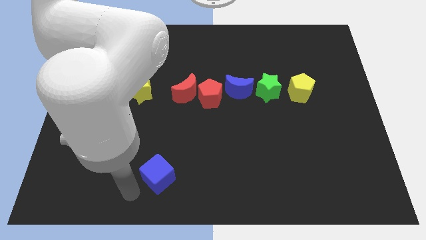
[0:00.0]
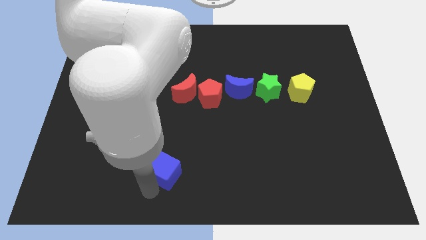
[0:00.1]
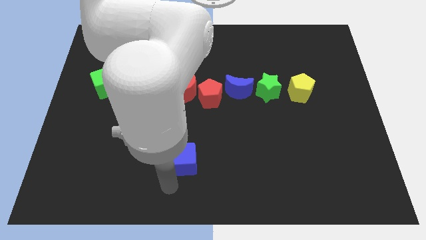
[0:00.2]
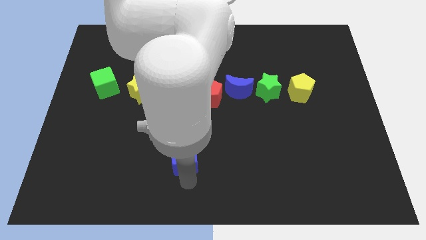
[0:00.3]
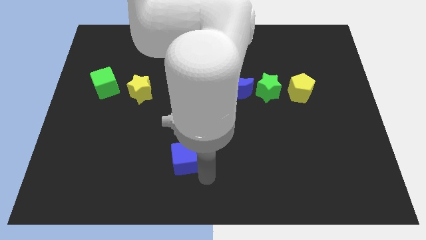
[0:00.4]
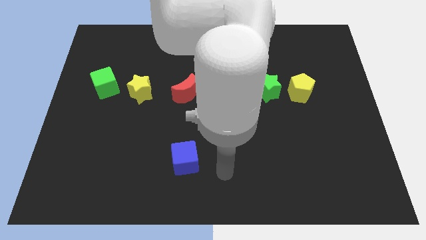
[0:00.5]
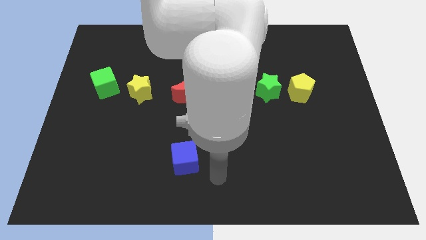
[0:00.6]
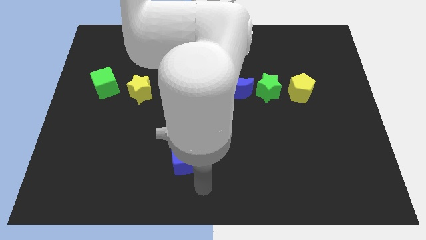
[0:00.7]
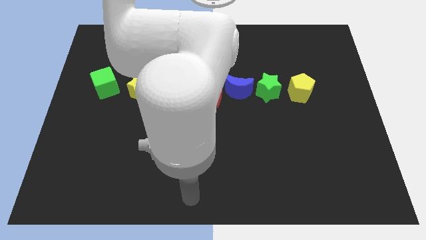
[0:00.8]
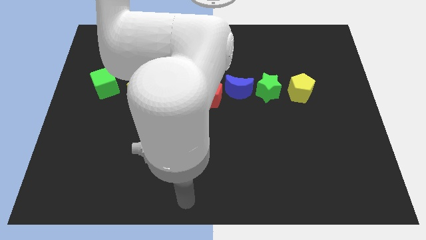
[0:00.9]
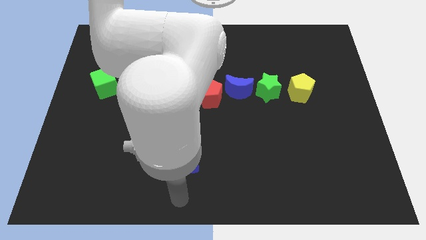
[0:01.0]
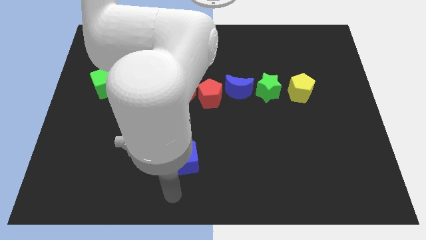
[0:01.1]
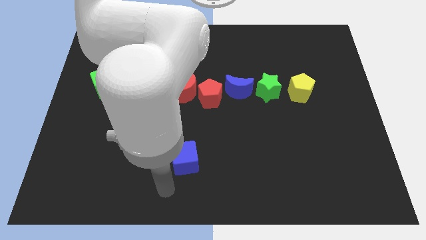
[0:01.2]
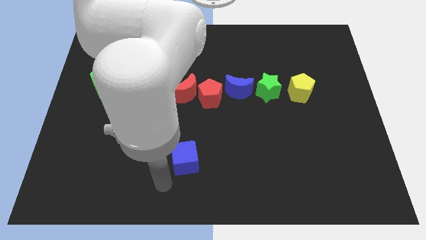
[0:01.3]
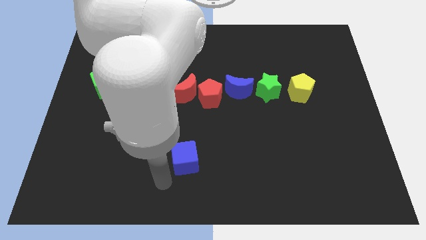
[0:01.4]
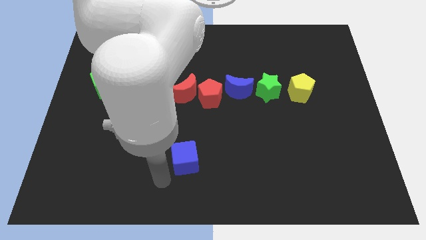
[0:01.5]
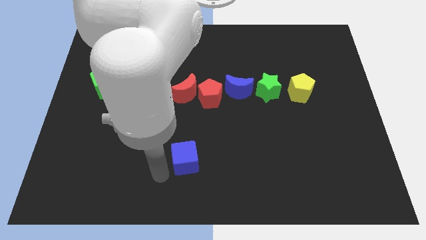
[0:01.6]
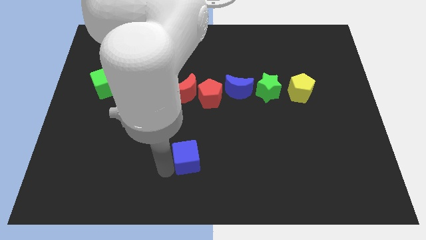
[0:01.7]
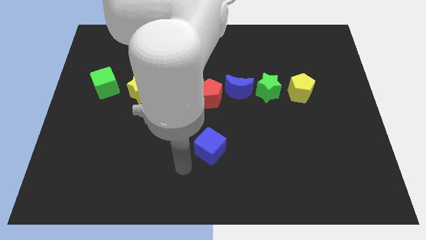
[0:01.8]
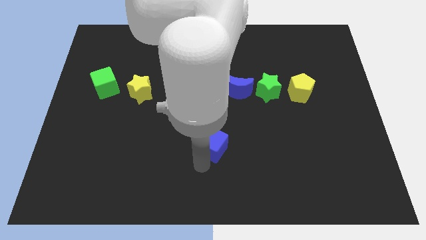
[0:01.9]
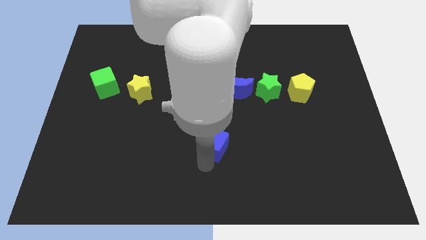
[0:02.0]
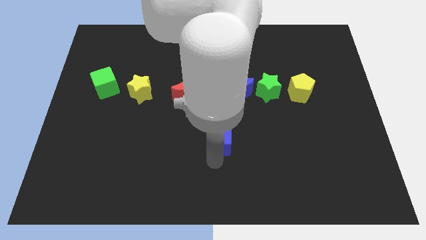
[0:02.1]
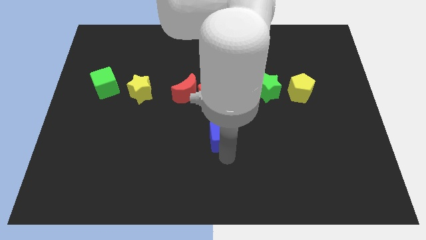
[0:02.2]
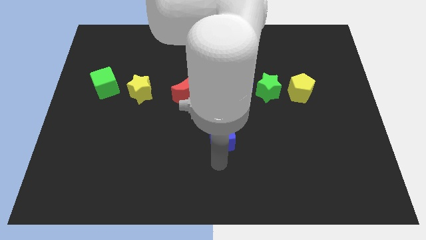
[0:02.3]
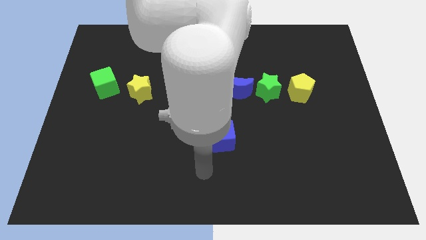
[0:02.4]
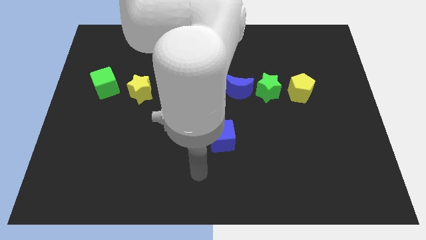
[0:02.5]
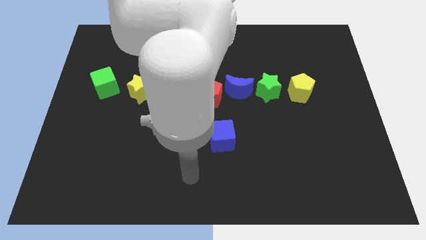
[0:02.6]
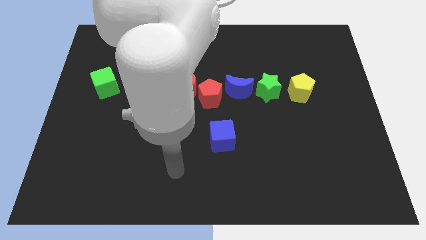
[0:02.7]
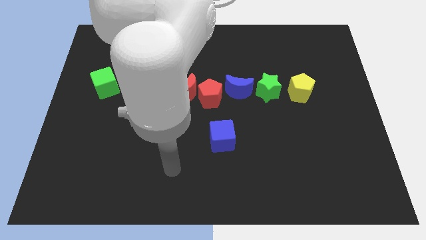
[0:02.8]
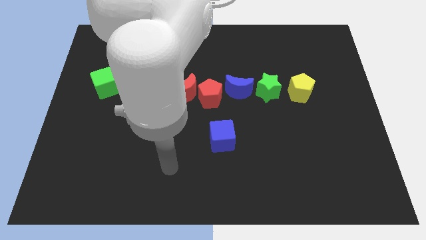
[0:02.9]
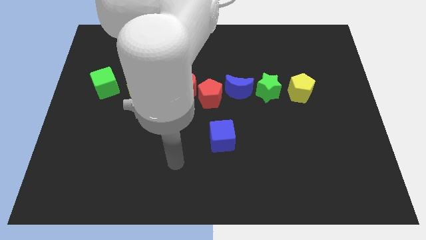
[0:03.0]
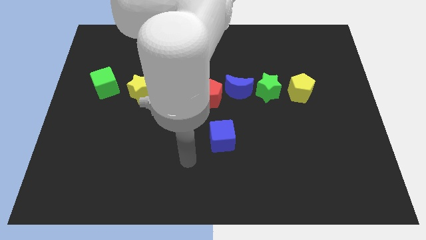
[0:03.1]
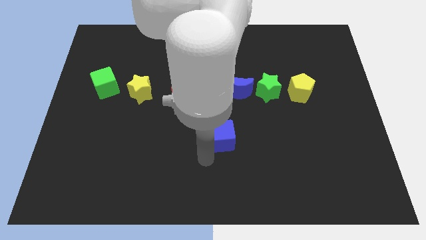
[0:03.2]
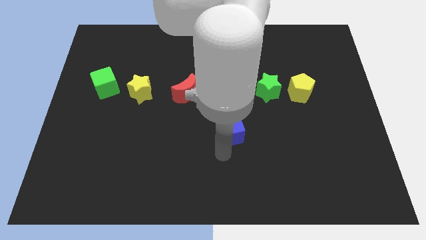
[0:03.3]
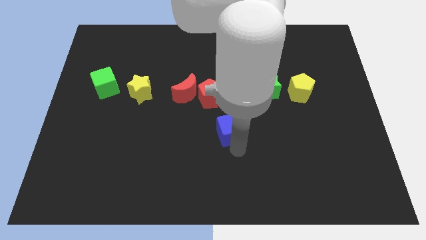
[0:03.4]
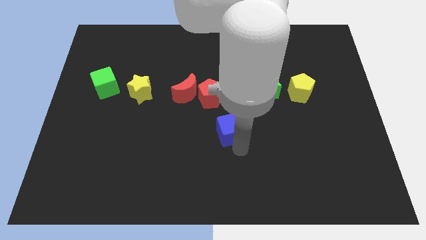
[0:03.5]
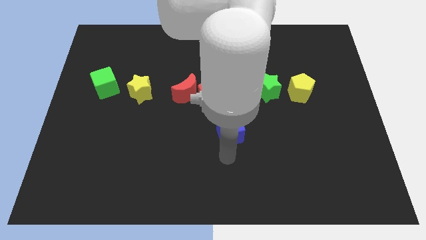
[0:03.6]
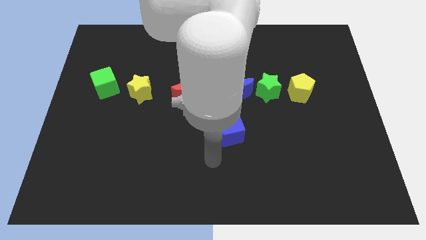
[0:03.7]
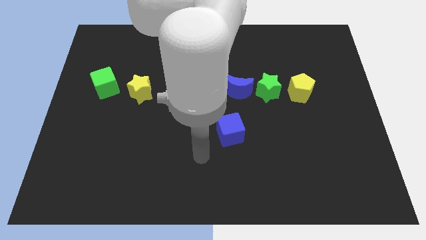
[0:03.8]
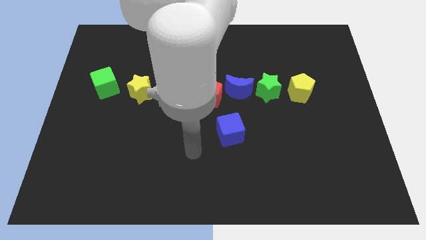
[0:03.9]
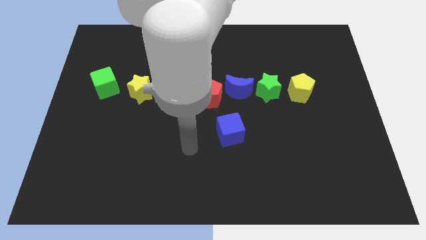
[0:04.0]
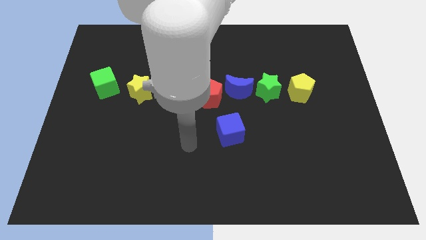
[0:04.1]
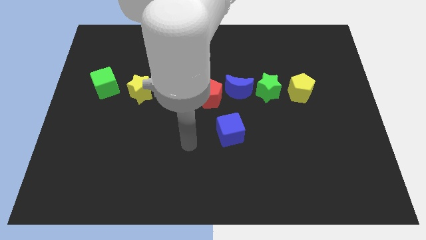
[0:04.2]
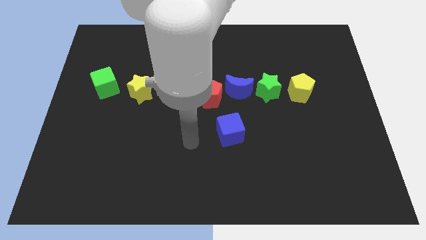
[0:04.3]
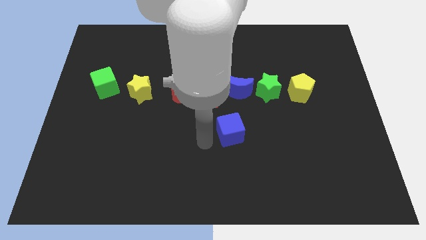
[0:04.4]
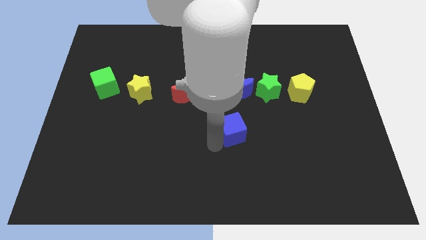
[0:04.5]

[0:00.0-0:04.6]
push the blue cube towards the blue moon

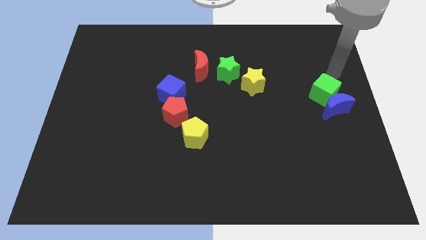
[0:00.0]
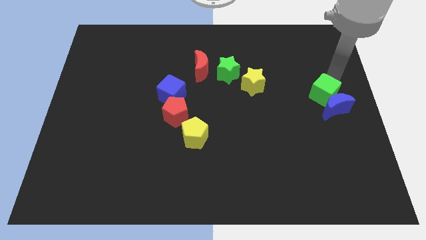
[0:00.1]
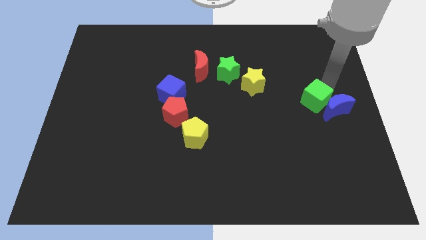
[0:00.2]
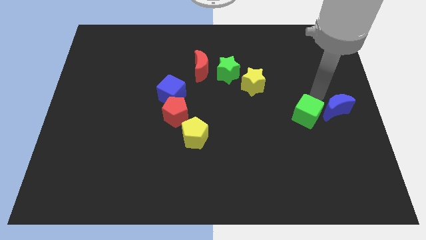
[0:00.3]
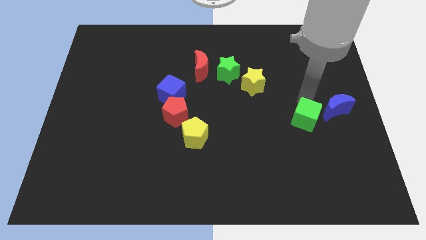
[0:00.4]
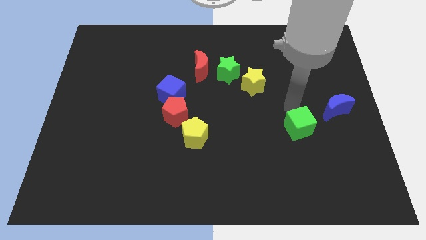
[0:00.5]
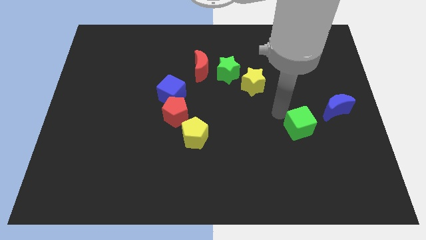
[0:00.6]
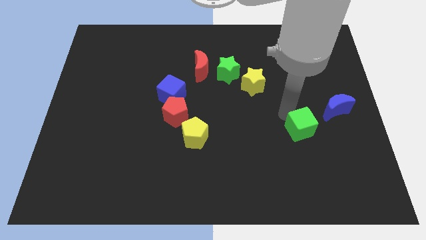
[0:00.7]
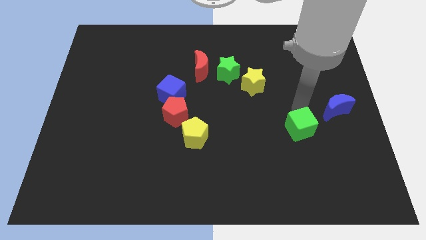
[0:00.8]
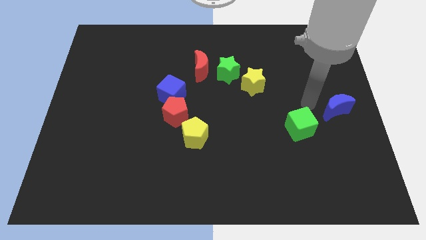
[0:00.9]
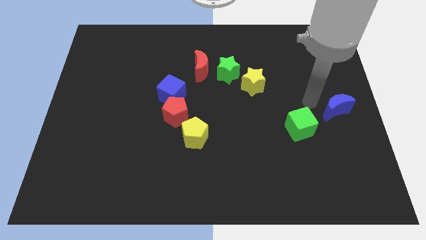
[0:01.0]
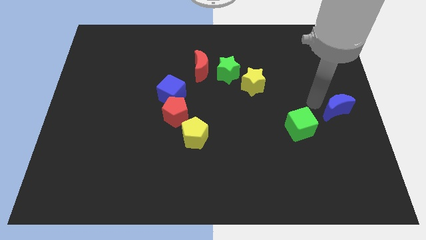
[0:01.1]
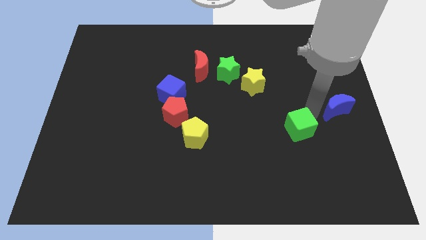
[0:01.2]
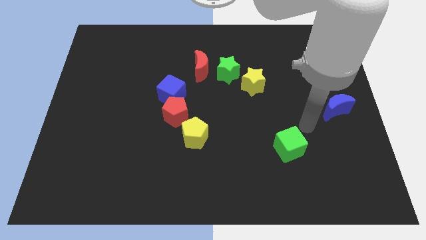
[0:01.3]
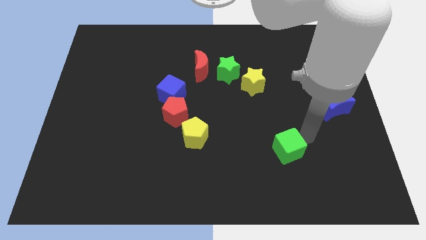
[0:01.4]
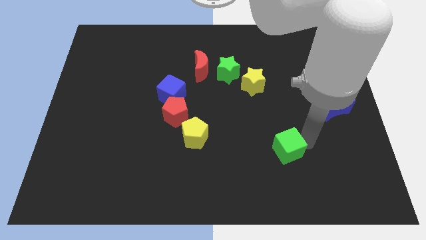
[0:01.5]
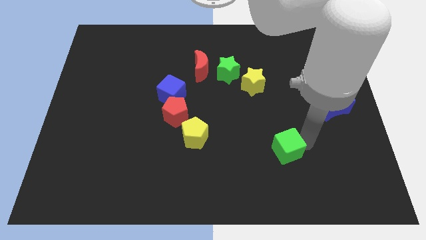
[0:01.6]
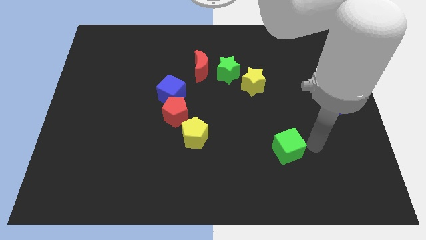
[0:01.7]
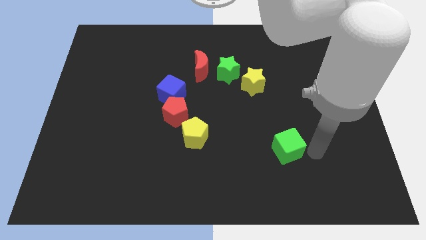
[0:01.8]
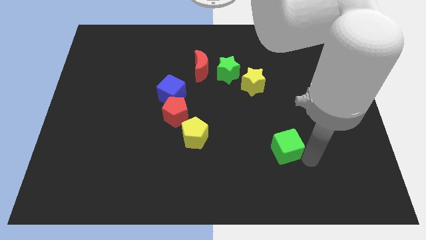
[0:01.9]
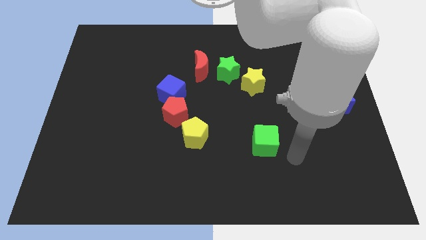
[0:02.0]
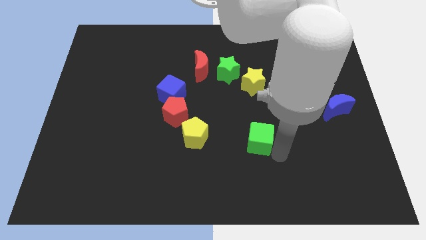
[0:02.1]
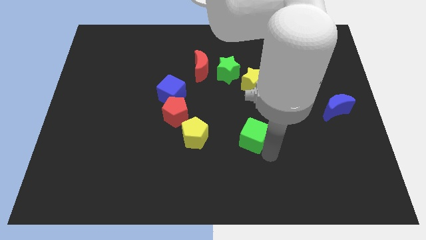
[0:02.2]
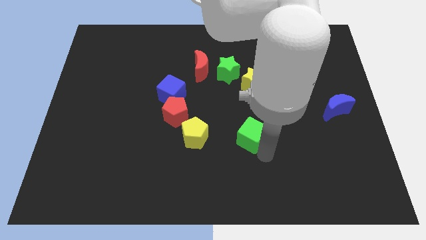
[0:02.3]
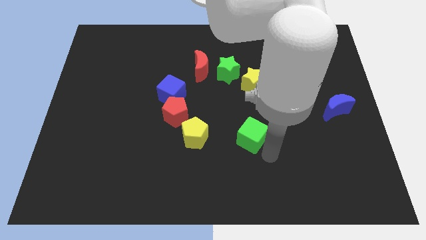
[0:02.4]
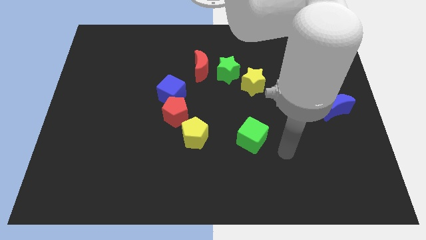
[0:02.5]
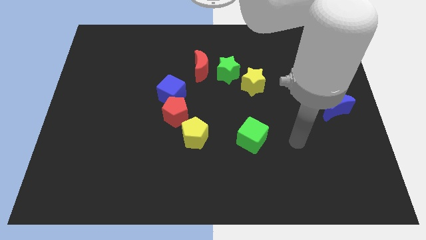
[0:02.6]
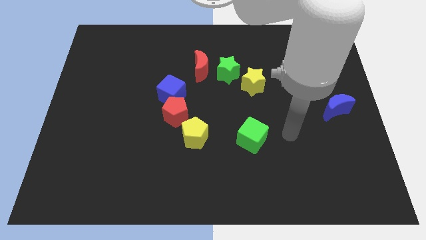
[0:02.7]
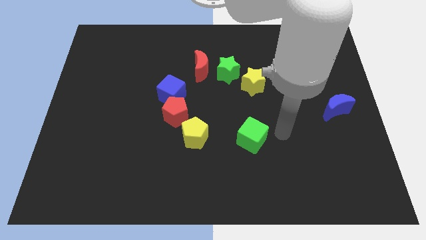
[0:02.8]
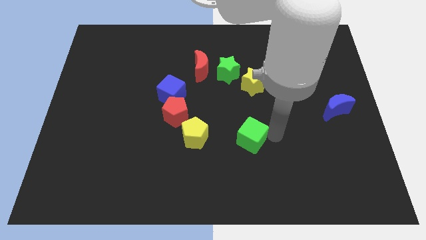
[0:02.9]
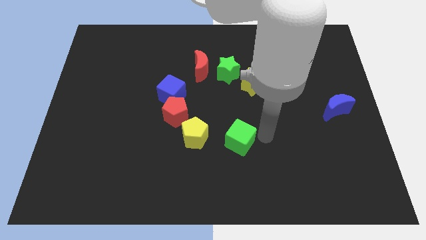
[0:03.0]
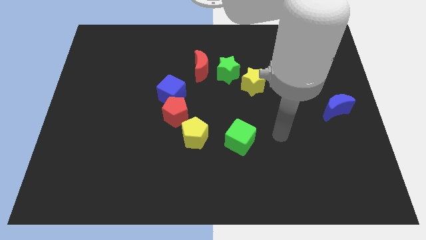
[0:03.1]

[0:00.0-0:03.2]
move the green cube horizontally to the yellow pentagon

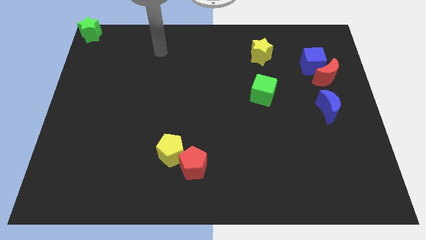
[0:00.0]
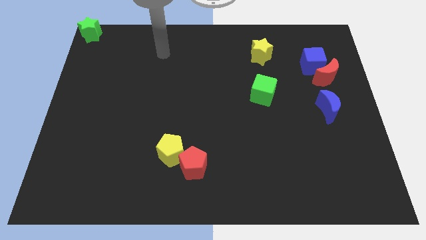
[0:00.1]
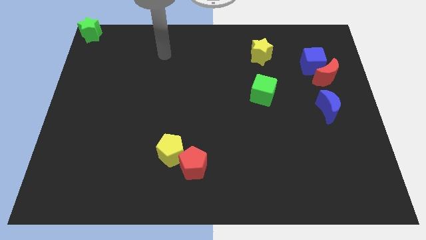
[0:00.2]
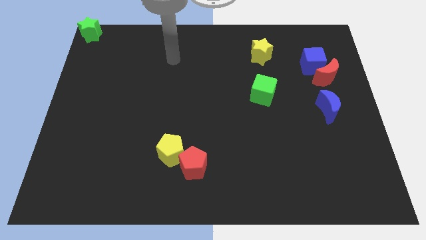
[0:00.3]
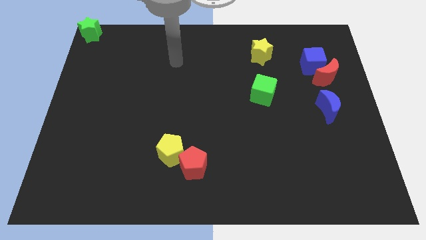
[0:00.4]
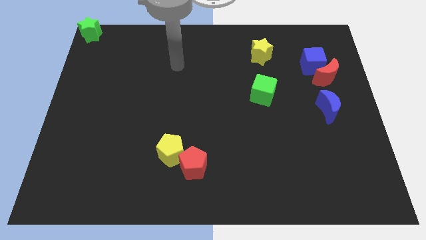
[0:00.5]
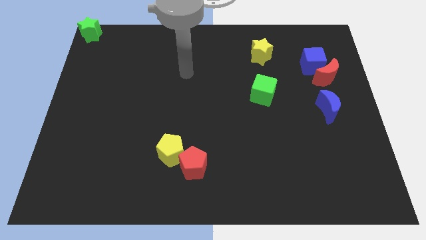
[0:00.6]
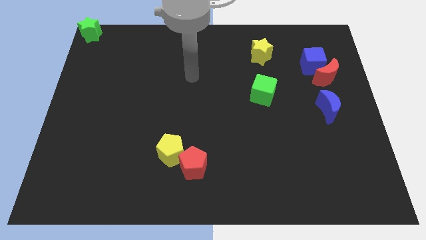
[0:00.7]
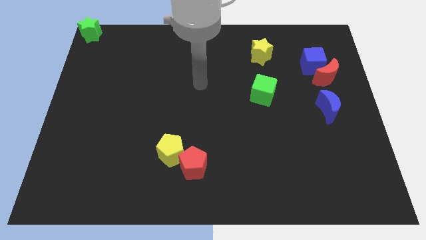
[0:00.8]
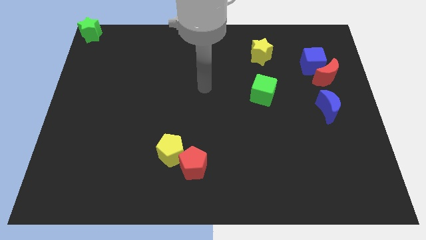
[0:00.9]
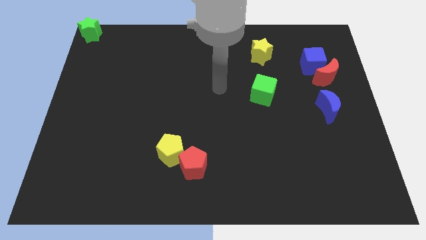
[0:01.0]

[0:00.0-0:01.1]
place arm in the center

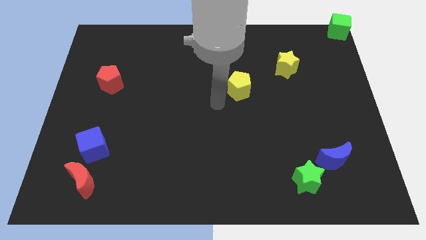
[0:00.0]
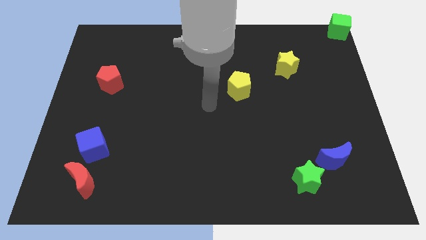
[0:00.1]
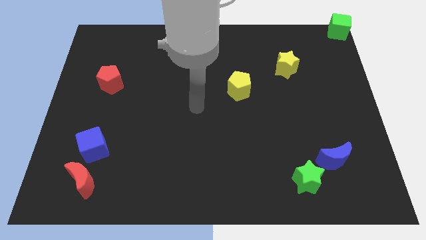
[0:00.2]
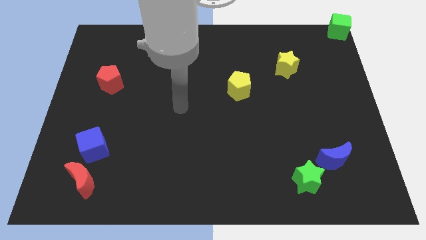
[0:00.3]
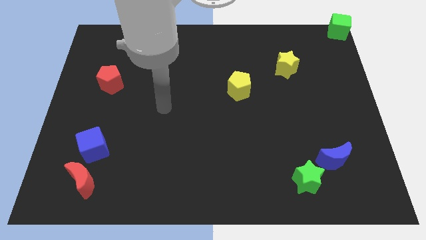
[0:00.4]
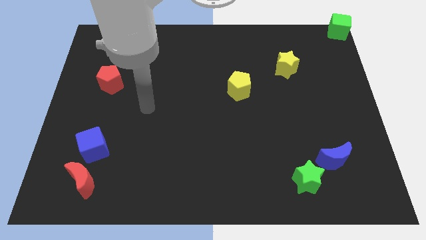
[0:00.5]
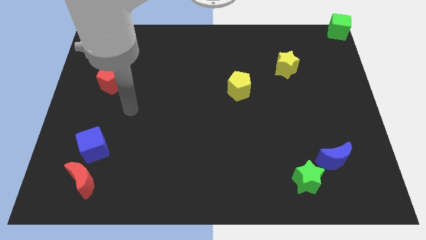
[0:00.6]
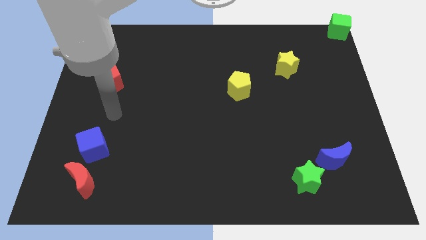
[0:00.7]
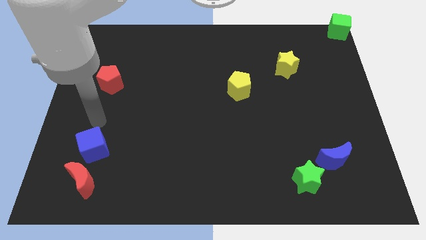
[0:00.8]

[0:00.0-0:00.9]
move the arm away from the yellow pentagon
